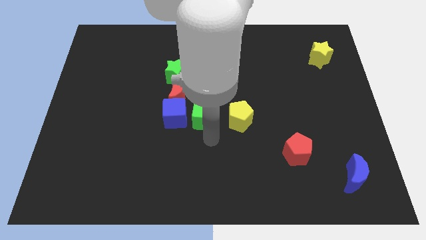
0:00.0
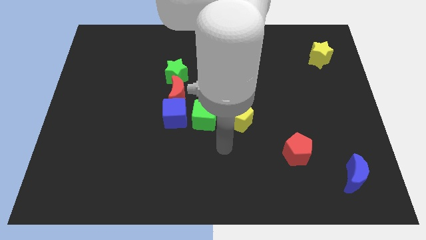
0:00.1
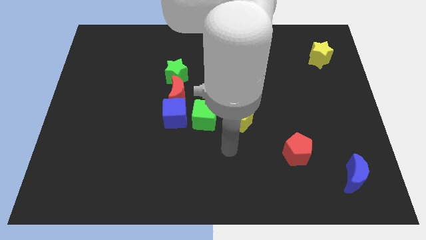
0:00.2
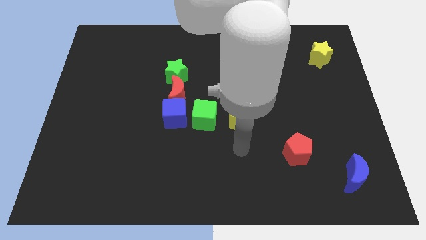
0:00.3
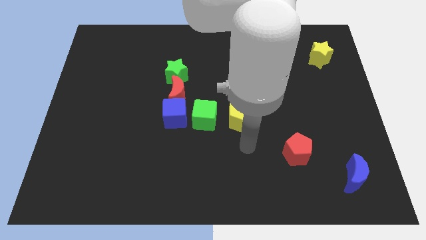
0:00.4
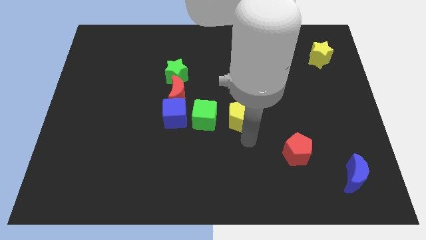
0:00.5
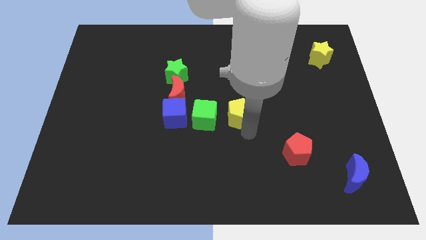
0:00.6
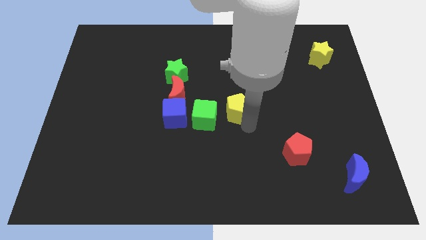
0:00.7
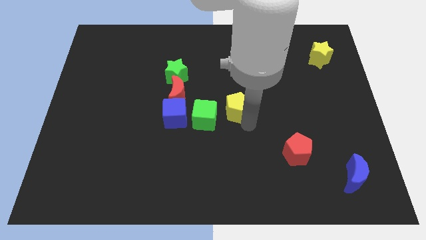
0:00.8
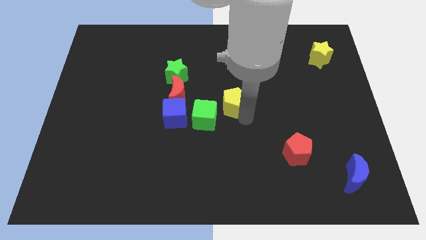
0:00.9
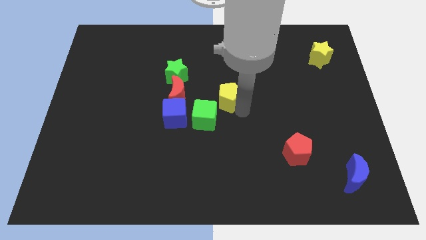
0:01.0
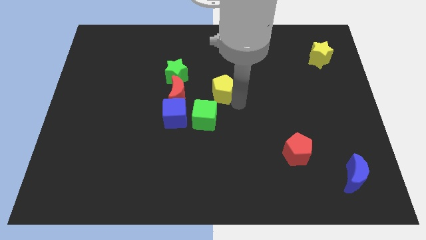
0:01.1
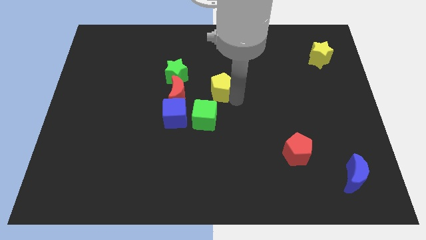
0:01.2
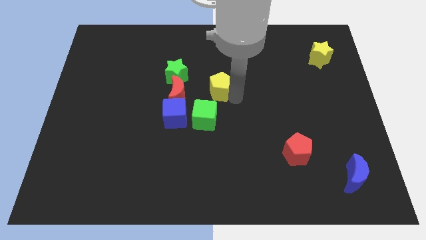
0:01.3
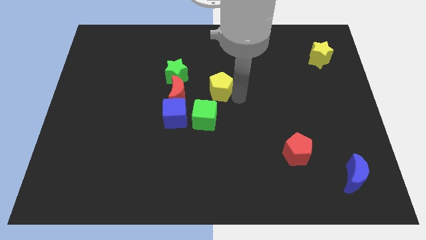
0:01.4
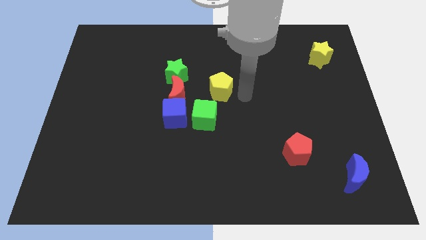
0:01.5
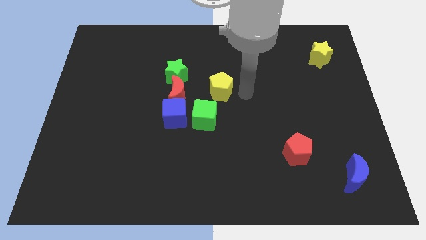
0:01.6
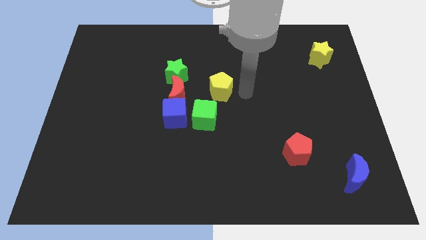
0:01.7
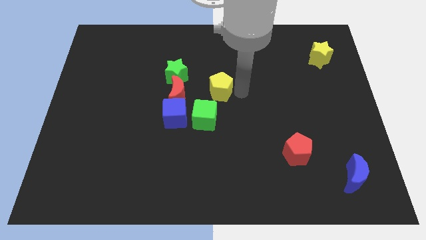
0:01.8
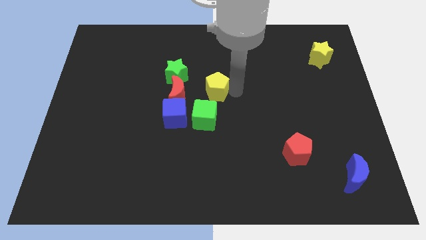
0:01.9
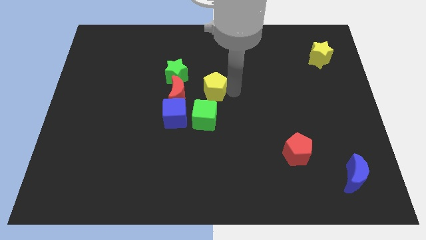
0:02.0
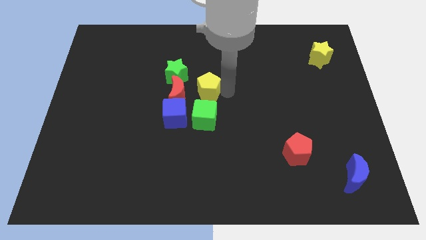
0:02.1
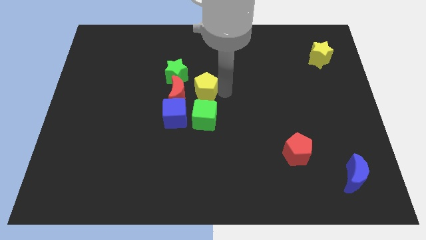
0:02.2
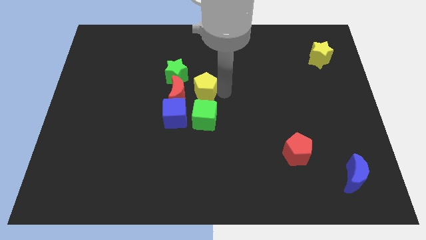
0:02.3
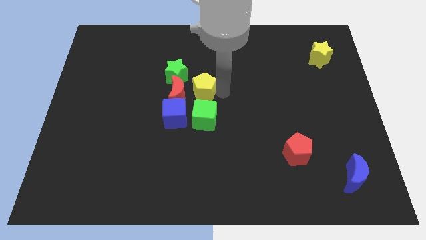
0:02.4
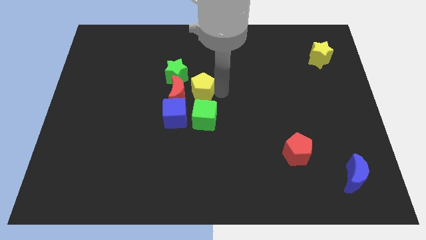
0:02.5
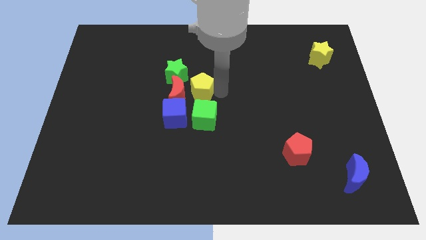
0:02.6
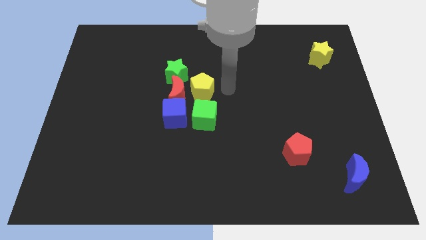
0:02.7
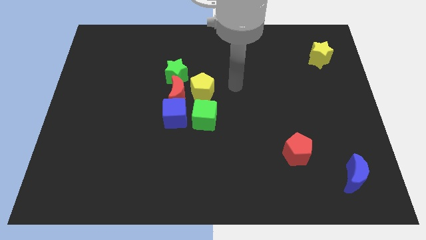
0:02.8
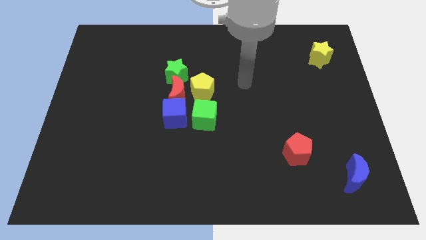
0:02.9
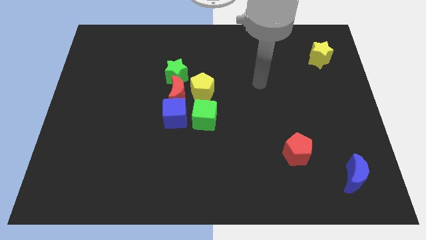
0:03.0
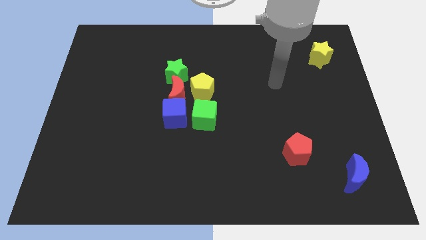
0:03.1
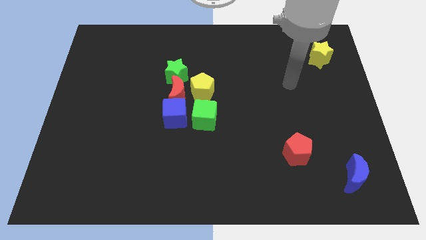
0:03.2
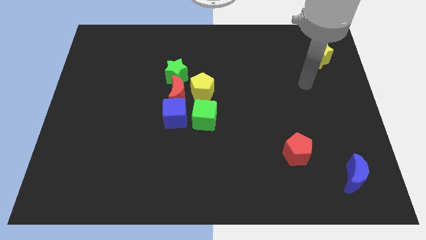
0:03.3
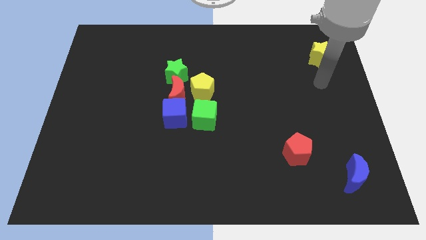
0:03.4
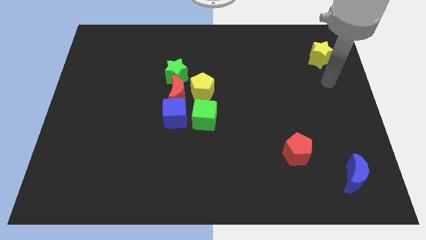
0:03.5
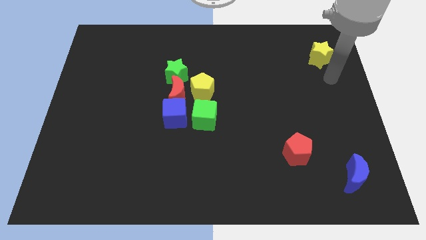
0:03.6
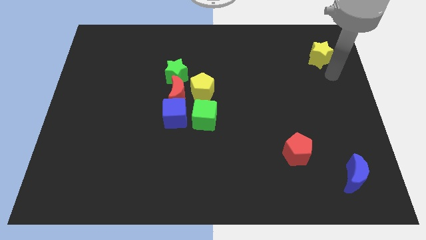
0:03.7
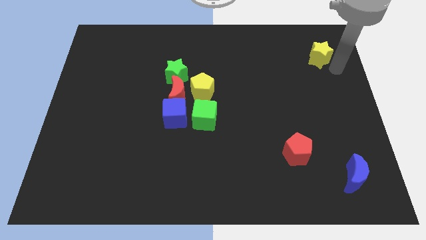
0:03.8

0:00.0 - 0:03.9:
place the yellow pentagon to the right side of the red crescent

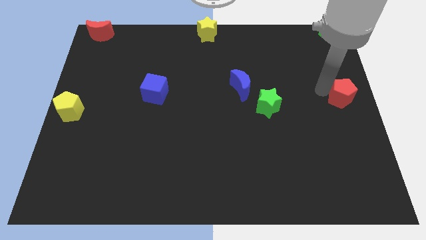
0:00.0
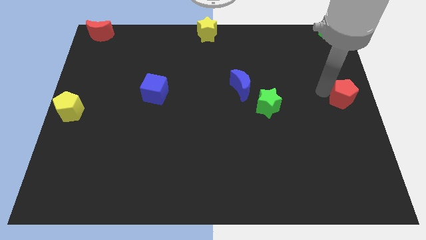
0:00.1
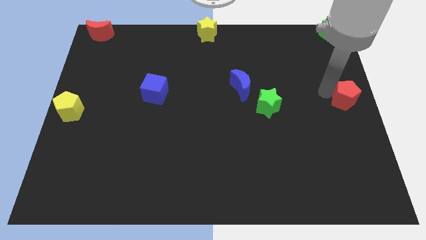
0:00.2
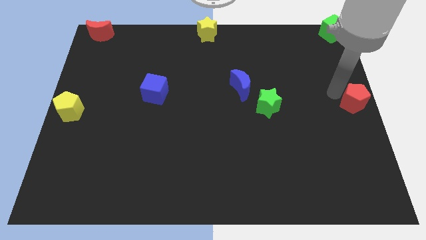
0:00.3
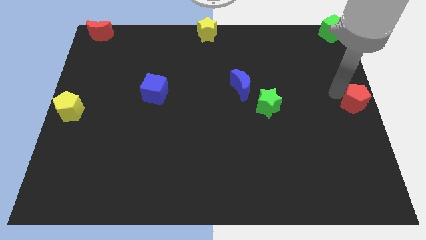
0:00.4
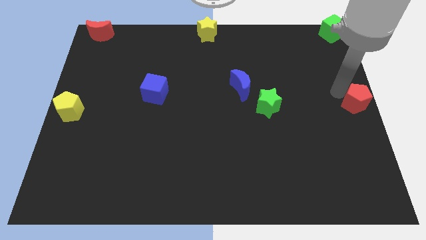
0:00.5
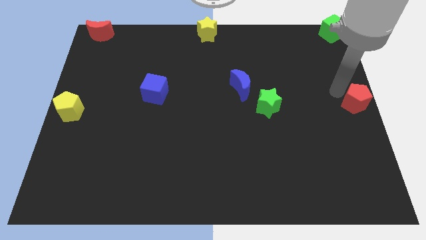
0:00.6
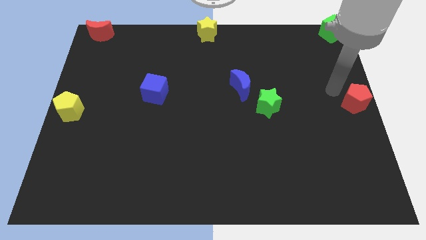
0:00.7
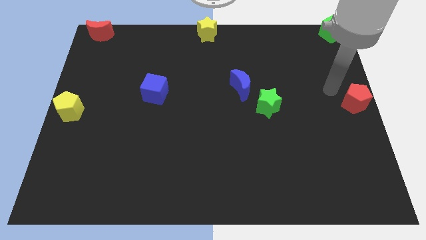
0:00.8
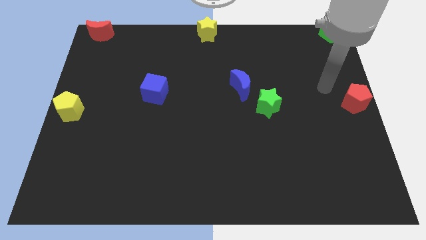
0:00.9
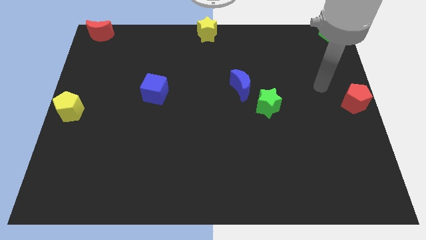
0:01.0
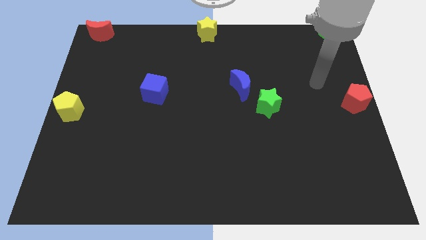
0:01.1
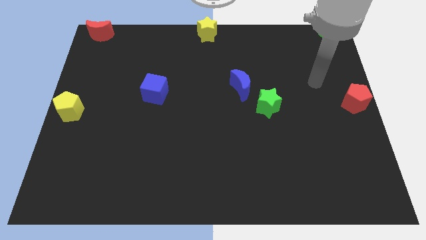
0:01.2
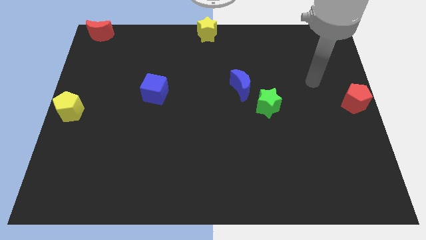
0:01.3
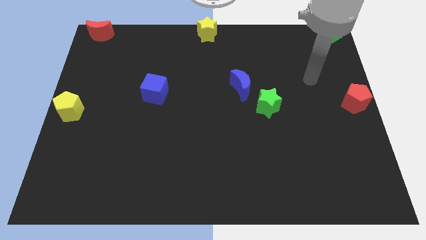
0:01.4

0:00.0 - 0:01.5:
push the red pentagon to the right center of the board

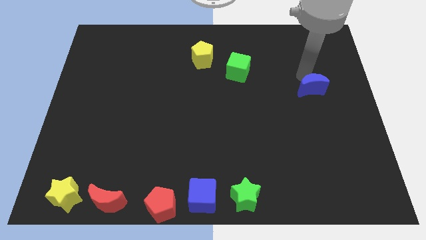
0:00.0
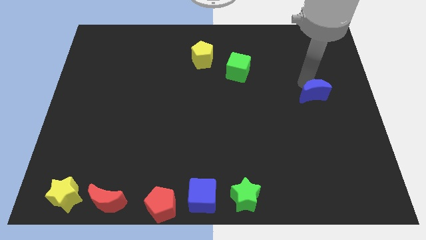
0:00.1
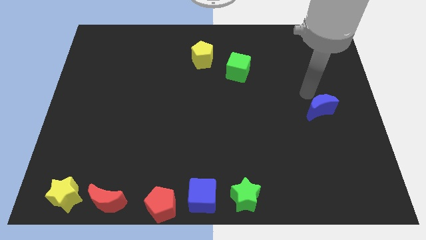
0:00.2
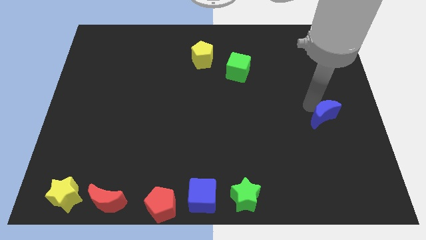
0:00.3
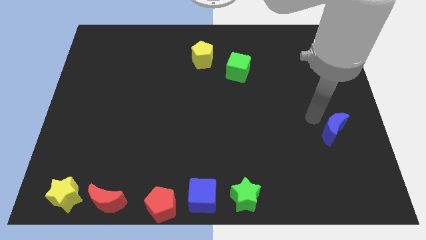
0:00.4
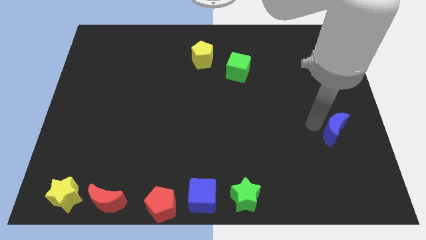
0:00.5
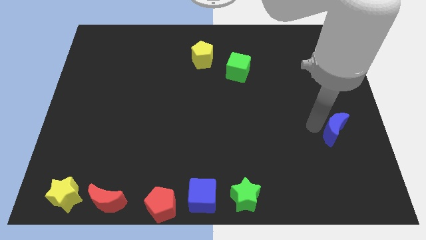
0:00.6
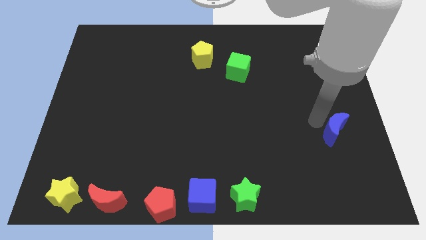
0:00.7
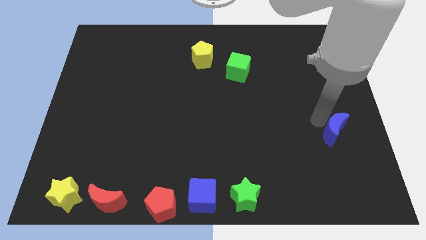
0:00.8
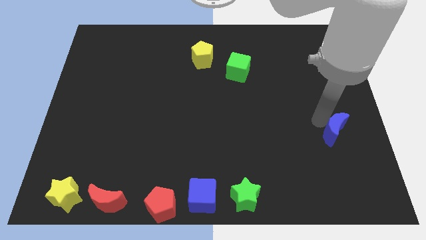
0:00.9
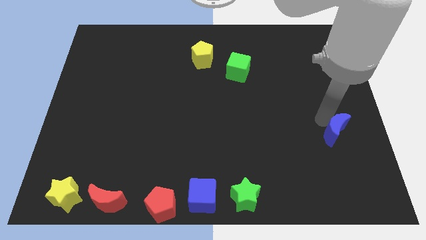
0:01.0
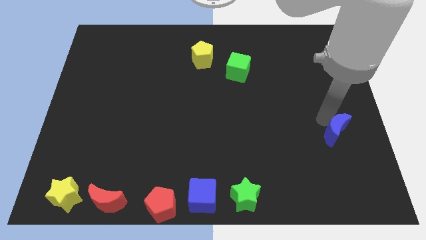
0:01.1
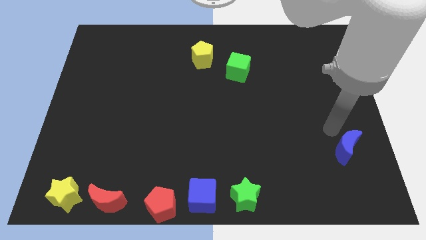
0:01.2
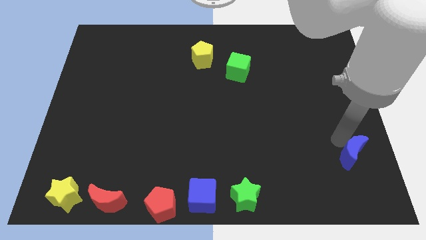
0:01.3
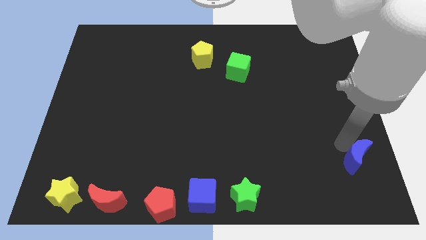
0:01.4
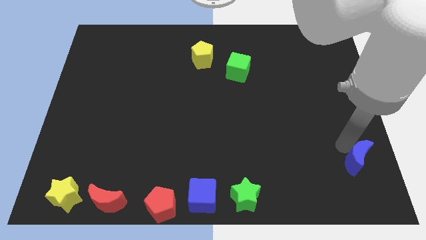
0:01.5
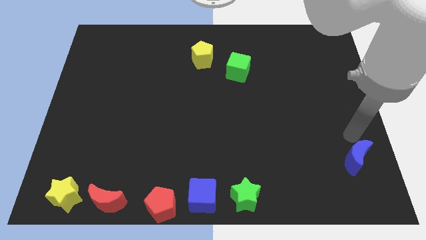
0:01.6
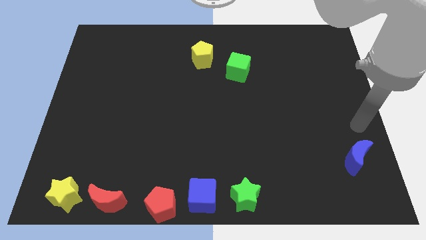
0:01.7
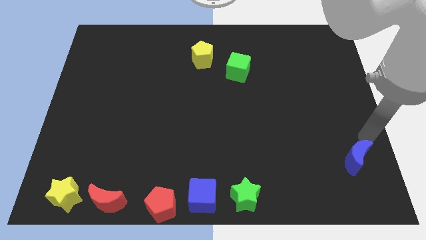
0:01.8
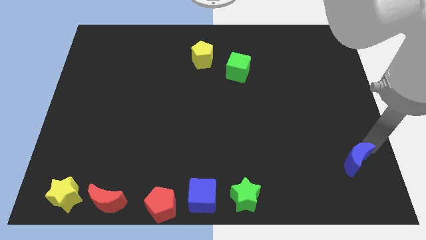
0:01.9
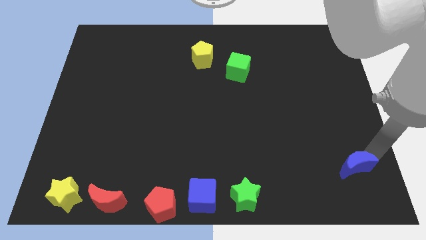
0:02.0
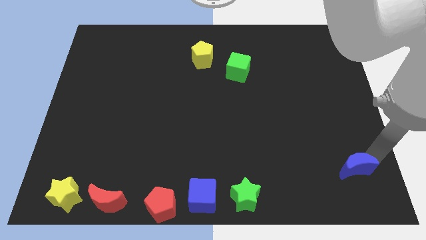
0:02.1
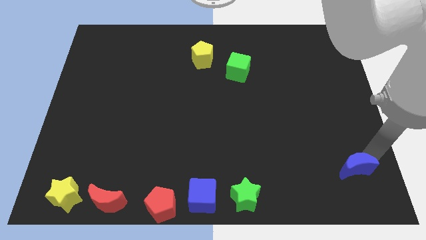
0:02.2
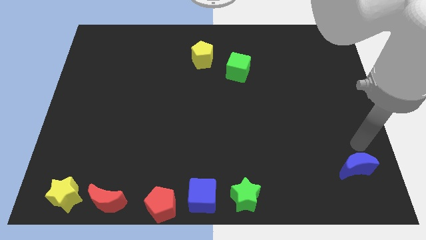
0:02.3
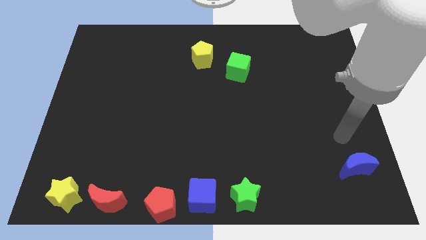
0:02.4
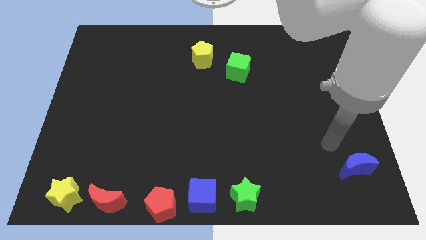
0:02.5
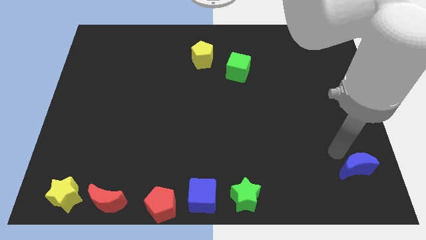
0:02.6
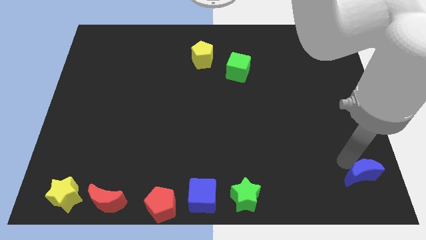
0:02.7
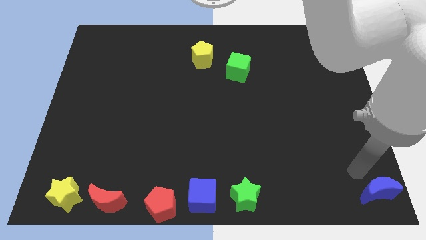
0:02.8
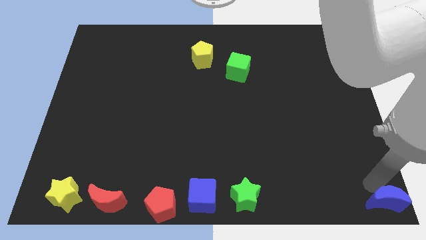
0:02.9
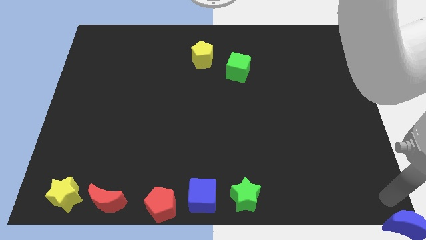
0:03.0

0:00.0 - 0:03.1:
slide the blue moon to the bottom right corner of the board

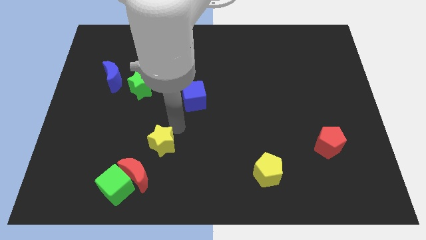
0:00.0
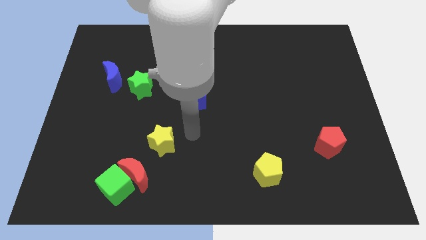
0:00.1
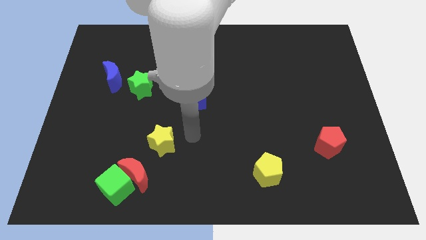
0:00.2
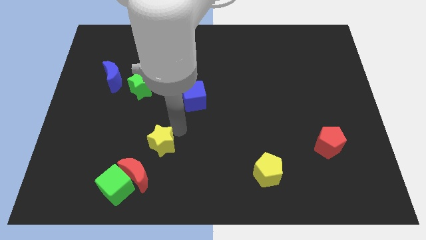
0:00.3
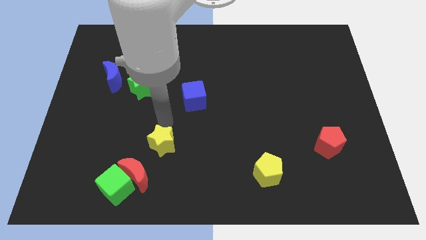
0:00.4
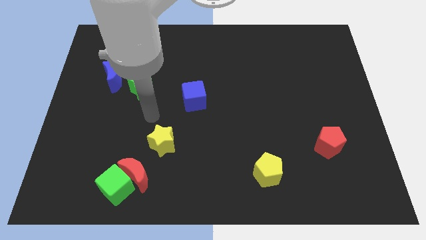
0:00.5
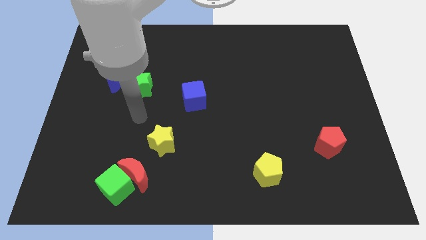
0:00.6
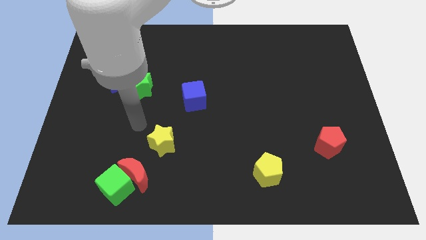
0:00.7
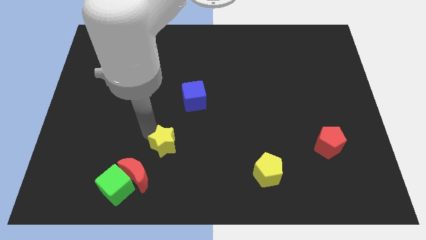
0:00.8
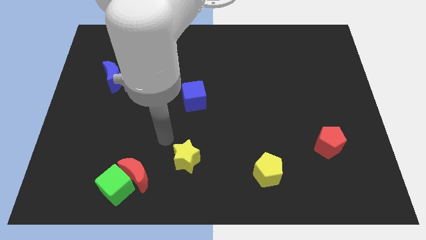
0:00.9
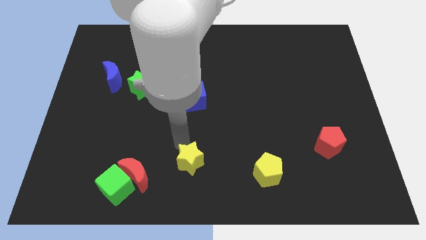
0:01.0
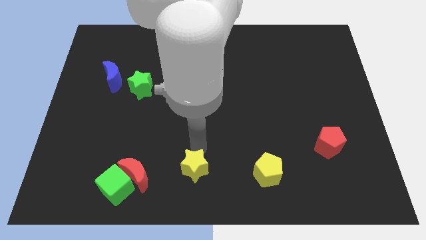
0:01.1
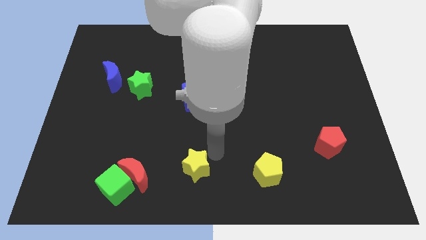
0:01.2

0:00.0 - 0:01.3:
place the yellow star right to the red moon
